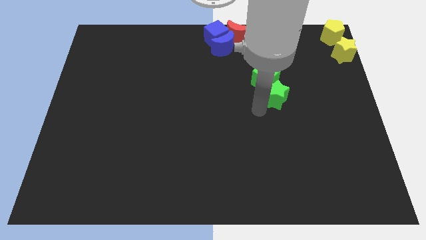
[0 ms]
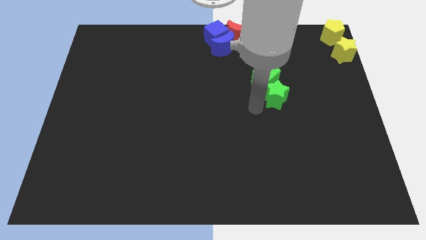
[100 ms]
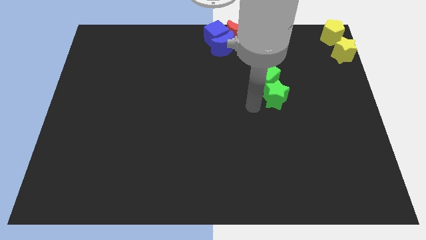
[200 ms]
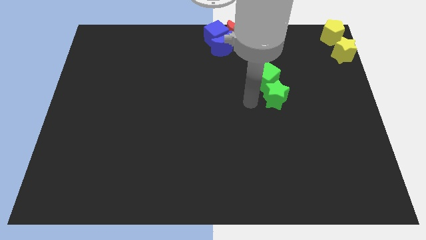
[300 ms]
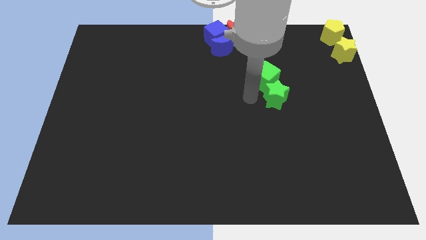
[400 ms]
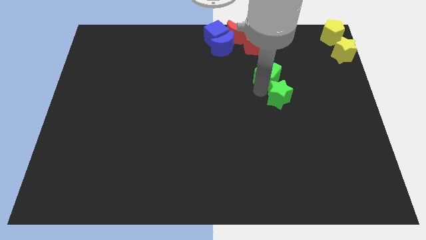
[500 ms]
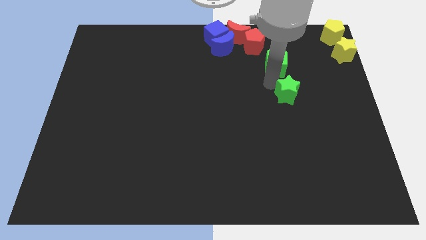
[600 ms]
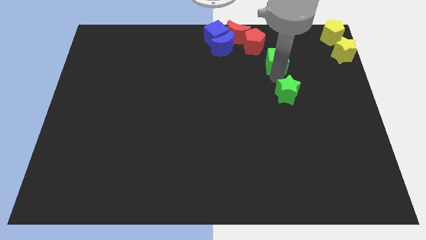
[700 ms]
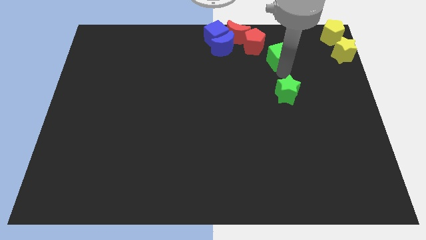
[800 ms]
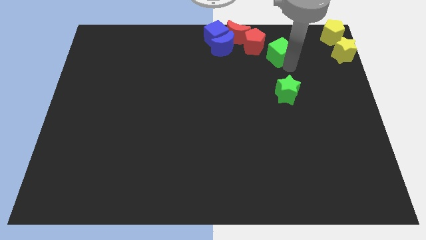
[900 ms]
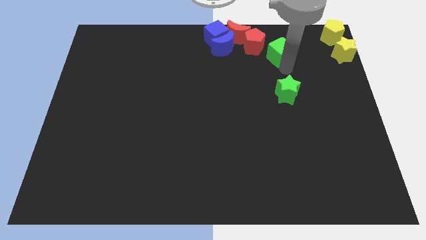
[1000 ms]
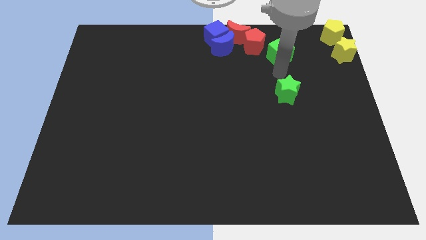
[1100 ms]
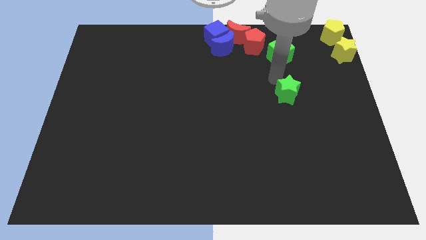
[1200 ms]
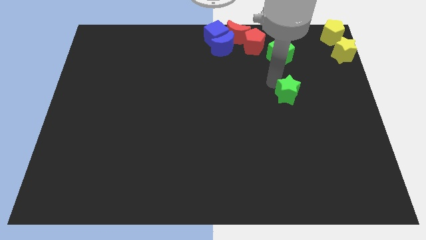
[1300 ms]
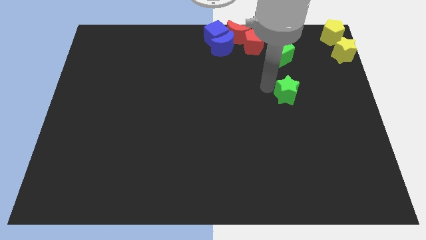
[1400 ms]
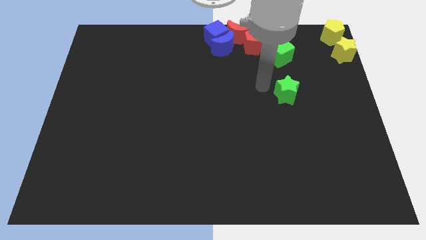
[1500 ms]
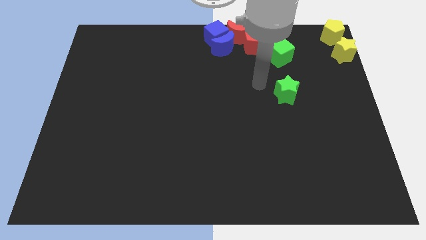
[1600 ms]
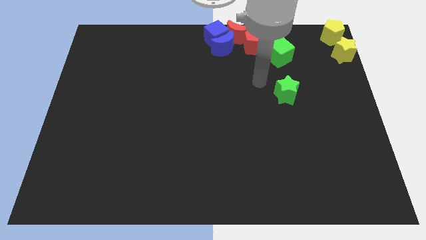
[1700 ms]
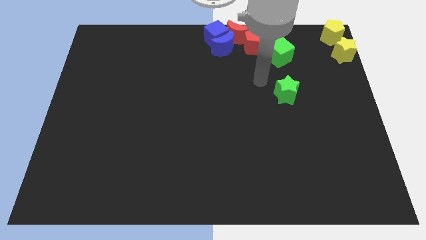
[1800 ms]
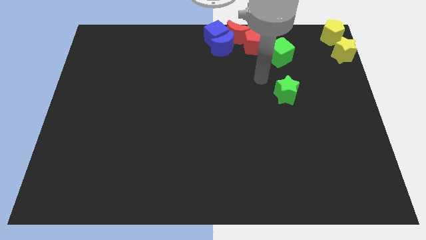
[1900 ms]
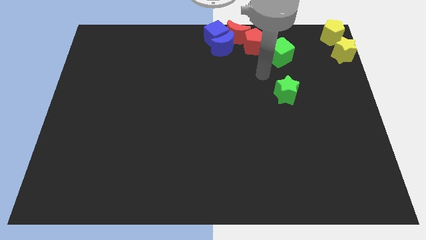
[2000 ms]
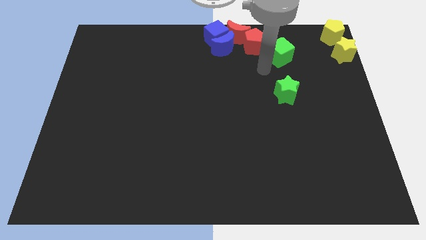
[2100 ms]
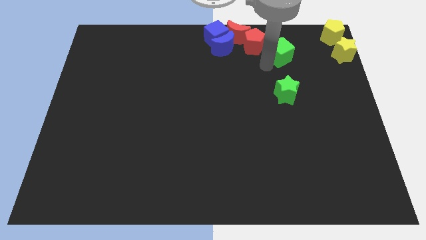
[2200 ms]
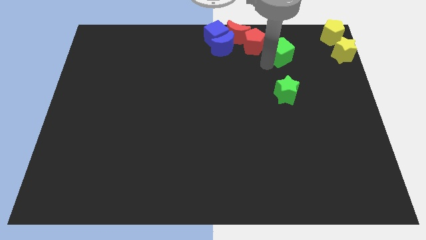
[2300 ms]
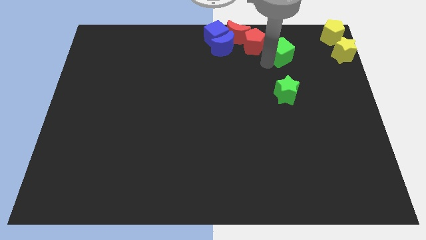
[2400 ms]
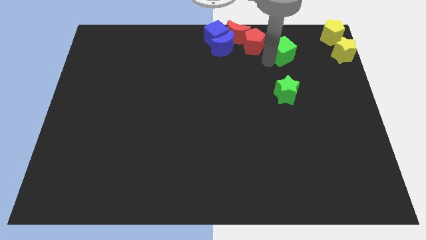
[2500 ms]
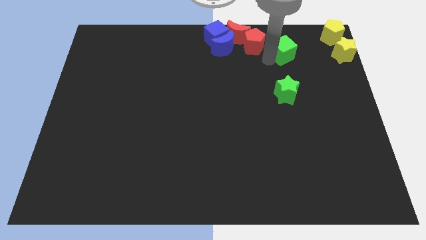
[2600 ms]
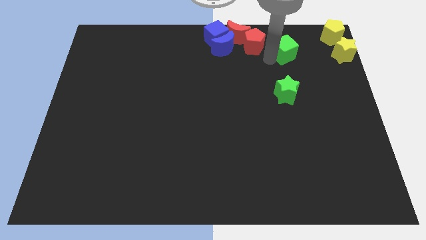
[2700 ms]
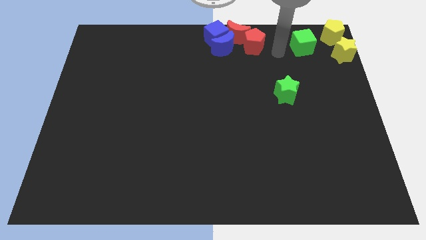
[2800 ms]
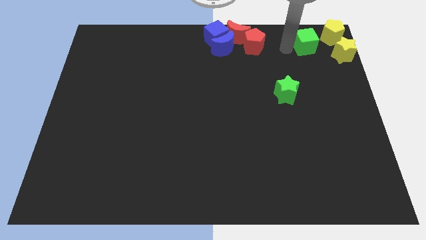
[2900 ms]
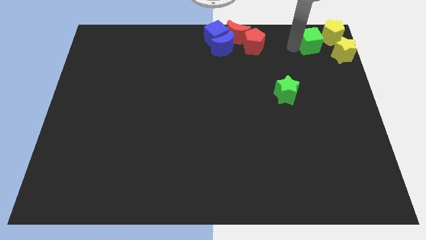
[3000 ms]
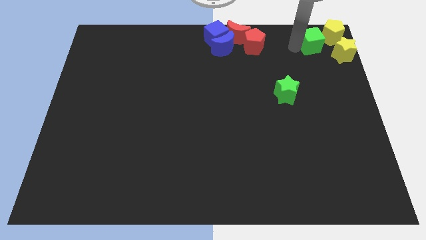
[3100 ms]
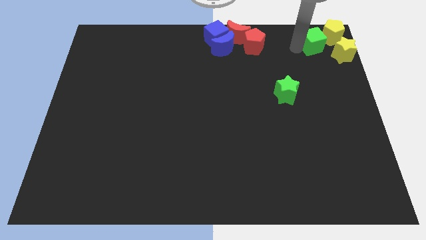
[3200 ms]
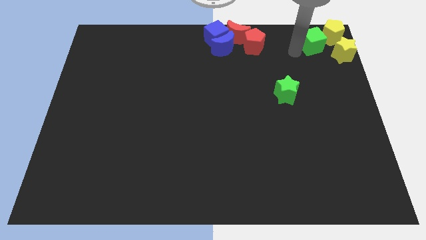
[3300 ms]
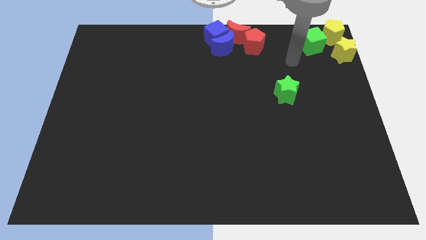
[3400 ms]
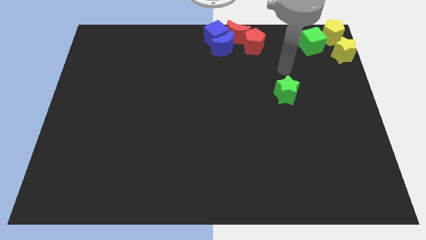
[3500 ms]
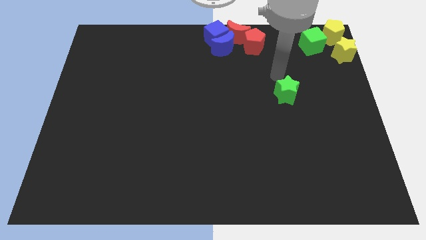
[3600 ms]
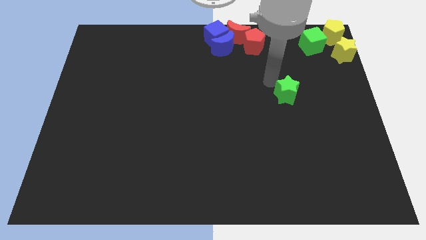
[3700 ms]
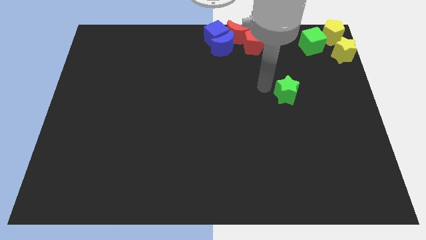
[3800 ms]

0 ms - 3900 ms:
move the green cube closer to the yellow pentagon

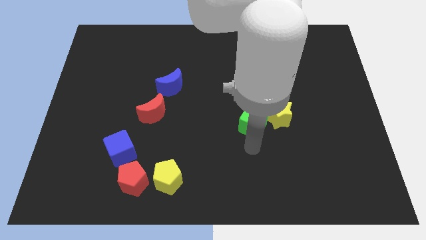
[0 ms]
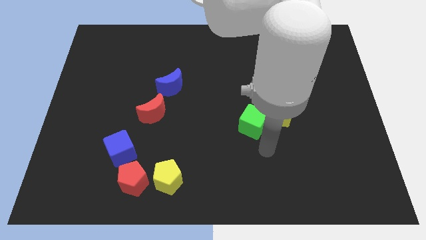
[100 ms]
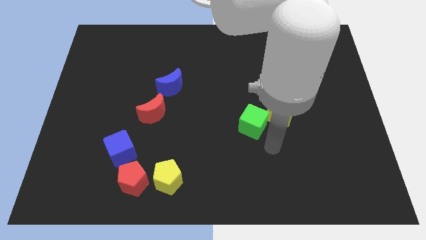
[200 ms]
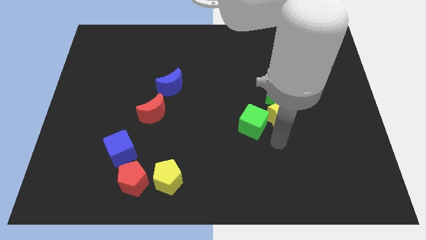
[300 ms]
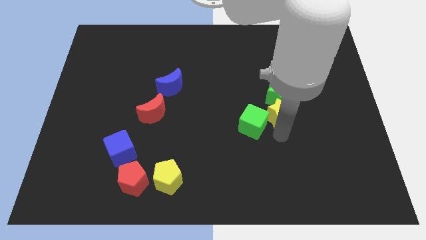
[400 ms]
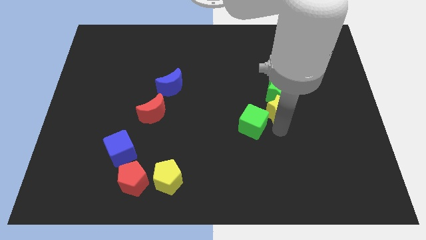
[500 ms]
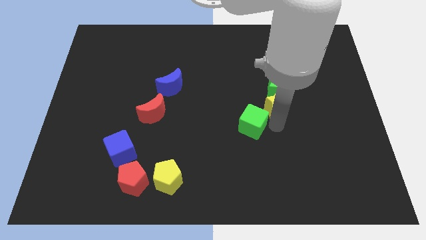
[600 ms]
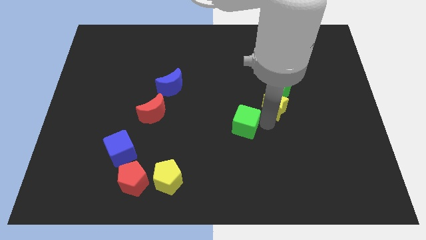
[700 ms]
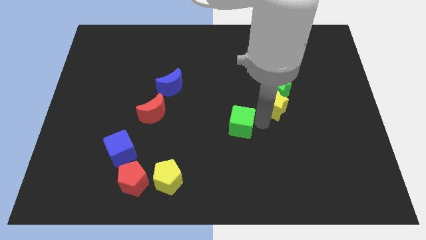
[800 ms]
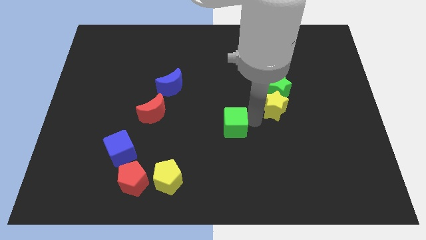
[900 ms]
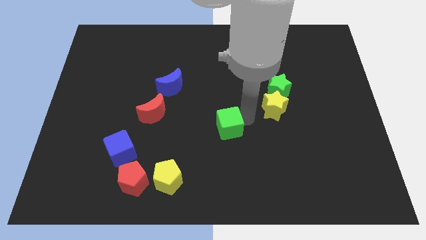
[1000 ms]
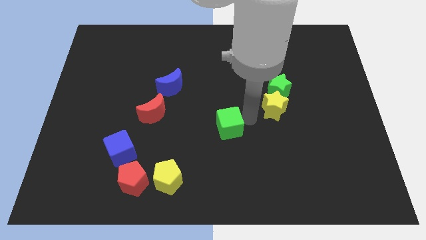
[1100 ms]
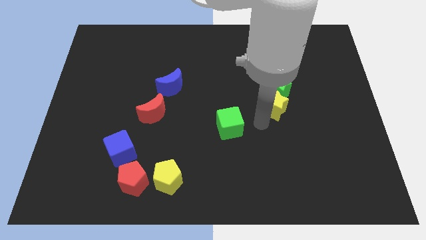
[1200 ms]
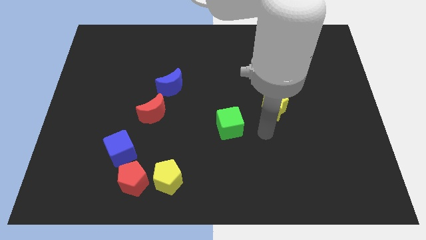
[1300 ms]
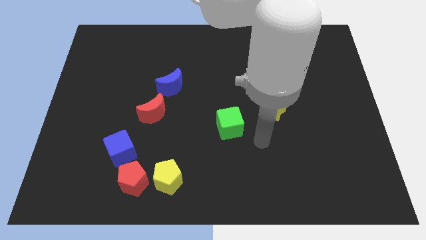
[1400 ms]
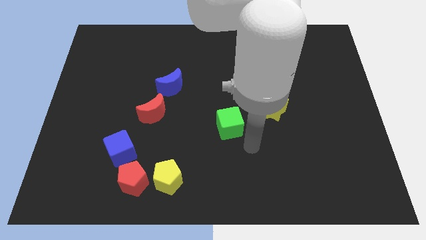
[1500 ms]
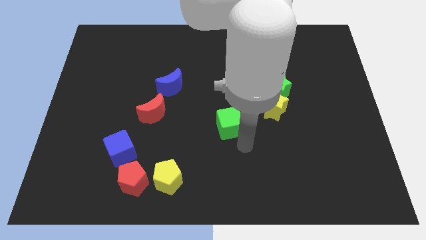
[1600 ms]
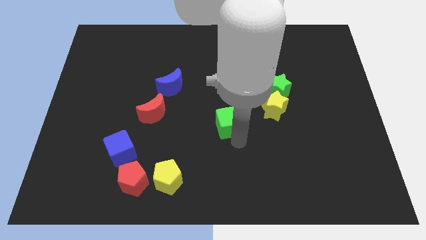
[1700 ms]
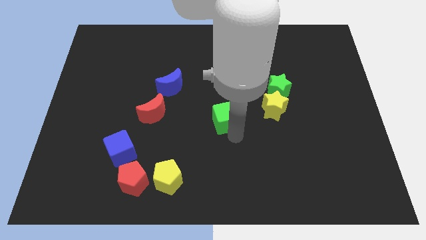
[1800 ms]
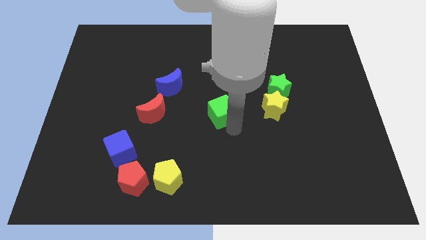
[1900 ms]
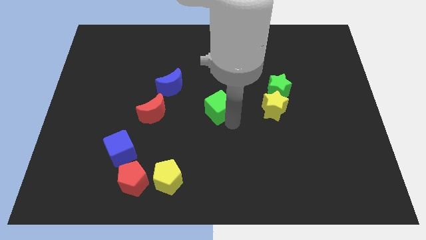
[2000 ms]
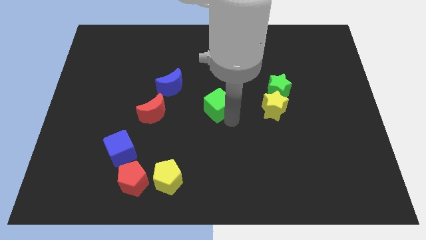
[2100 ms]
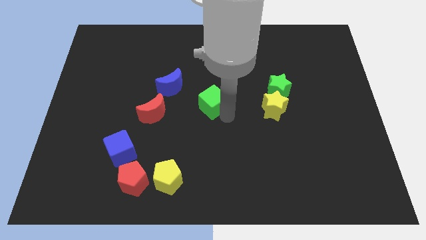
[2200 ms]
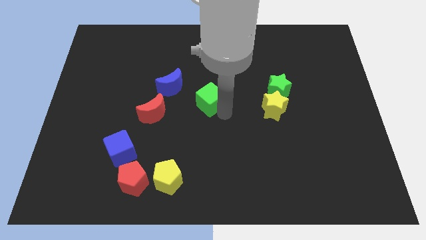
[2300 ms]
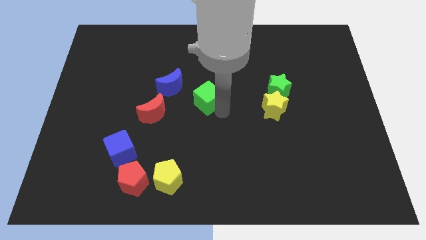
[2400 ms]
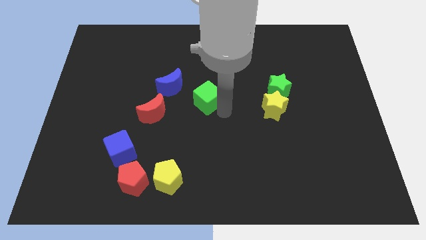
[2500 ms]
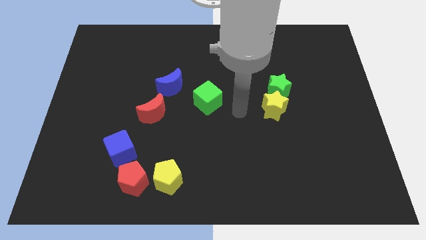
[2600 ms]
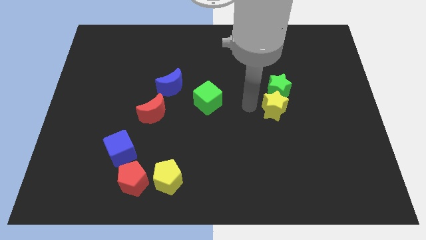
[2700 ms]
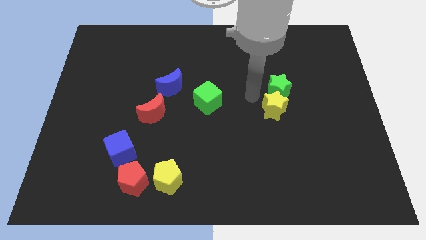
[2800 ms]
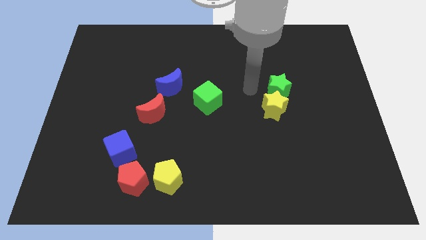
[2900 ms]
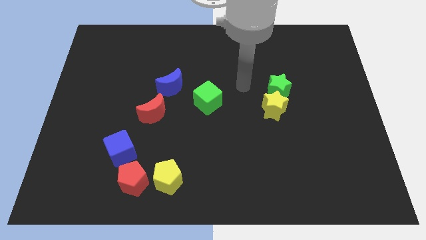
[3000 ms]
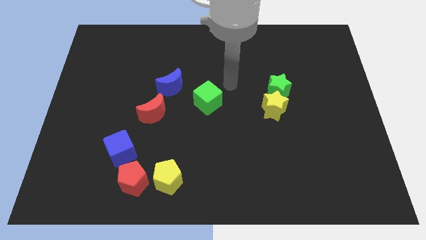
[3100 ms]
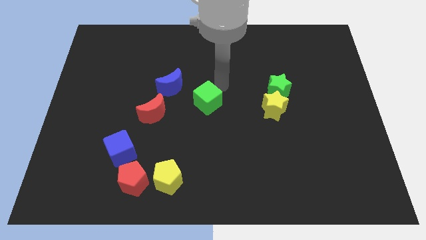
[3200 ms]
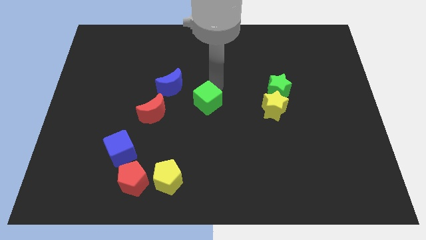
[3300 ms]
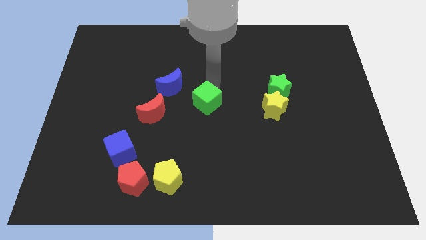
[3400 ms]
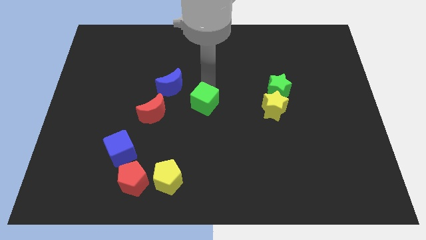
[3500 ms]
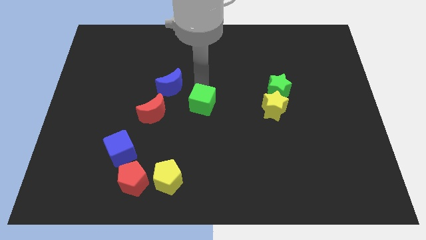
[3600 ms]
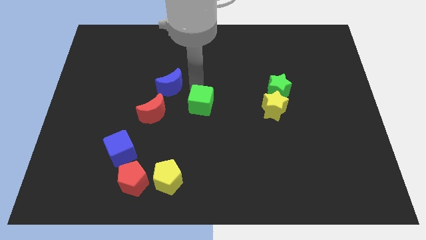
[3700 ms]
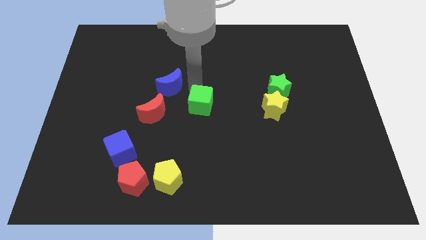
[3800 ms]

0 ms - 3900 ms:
place the green cube to the right of the red moon and blue crescent

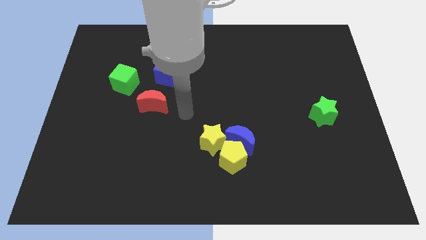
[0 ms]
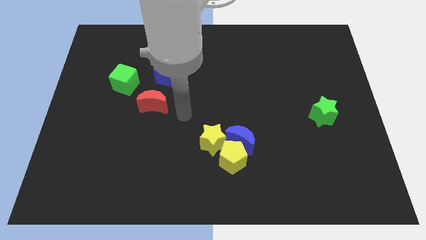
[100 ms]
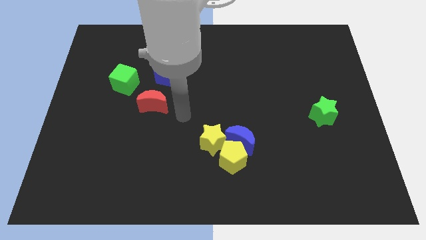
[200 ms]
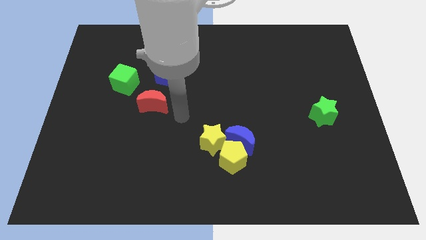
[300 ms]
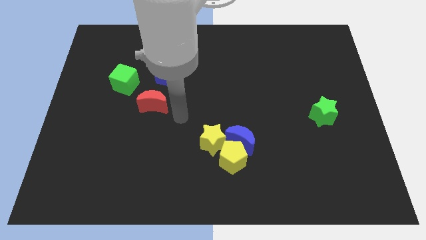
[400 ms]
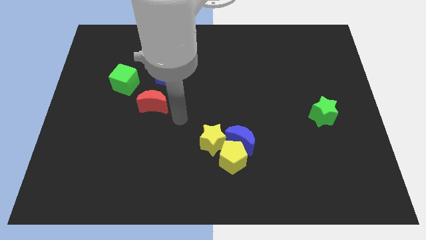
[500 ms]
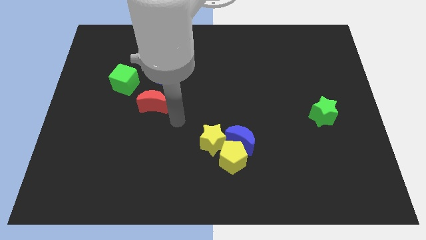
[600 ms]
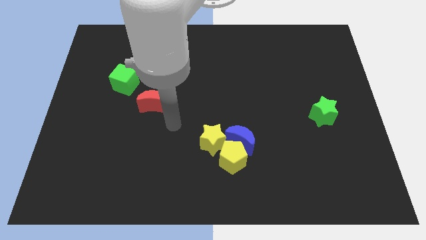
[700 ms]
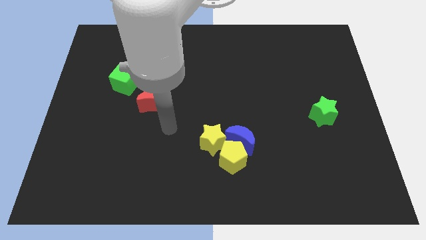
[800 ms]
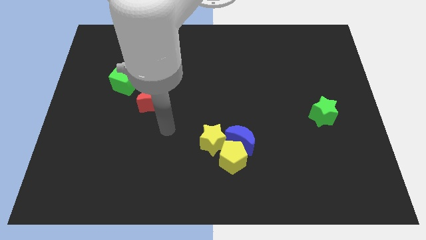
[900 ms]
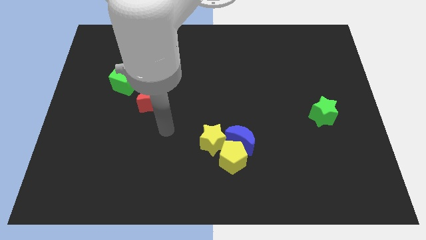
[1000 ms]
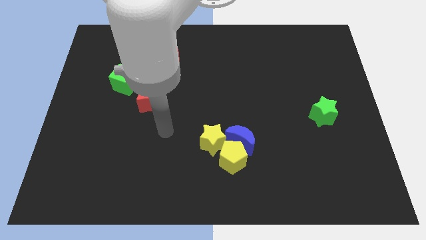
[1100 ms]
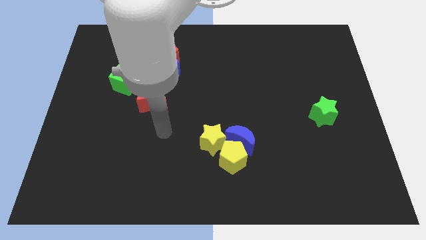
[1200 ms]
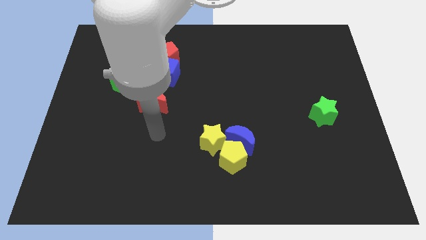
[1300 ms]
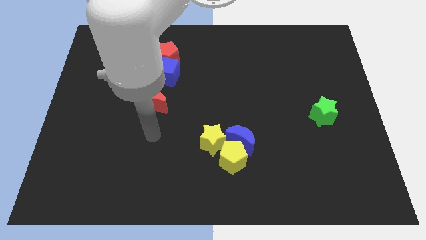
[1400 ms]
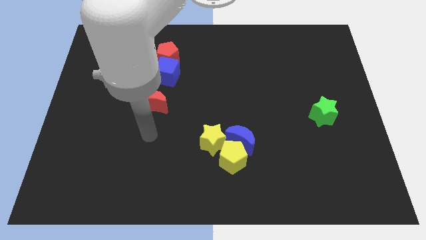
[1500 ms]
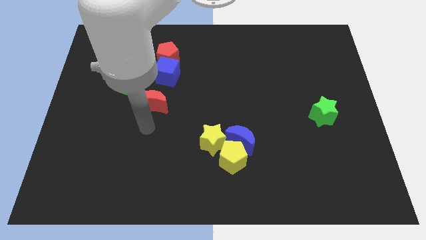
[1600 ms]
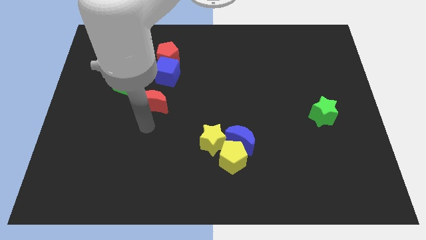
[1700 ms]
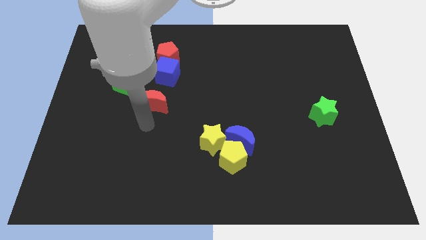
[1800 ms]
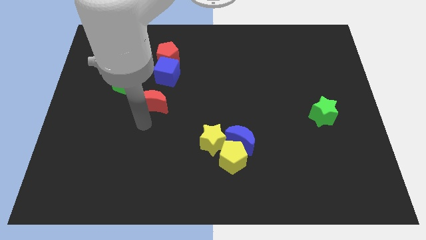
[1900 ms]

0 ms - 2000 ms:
point the arm below the red moon
